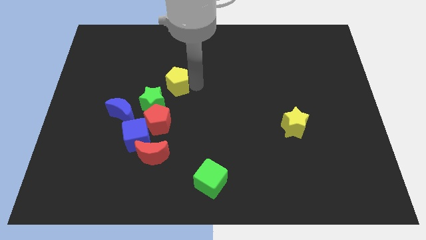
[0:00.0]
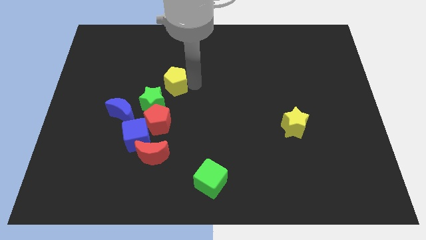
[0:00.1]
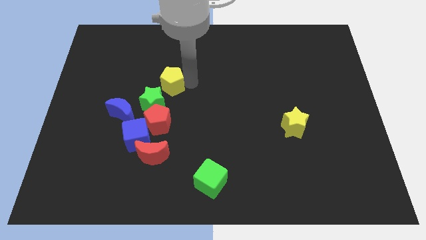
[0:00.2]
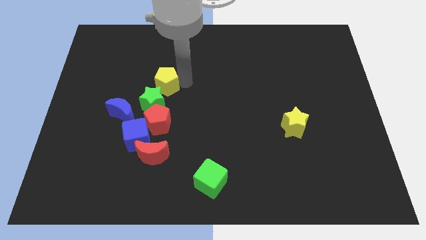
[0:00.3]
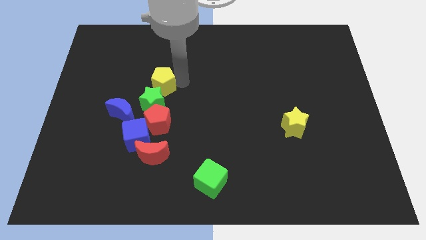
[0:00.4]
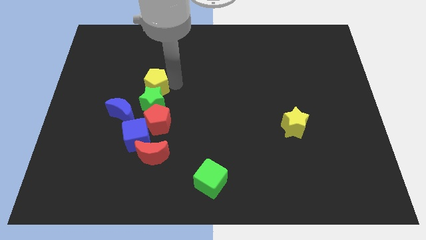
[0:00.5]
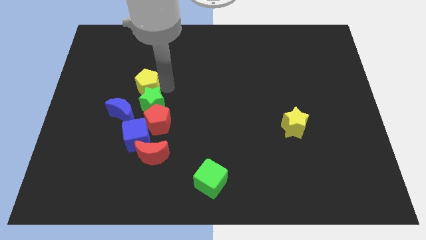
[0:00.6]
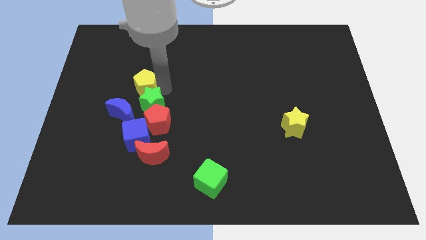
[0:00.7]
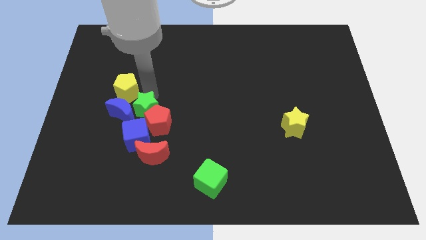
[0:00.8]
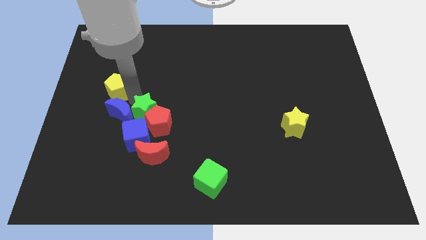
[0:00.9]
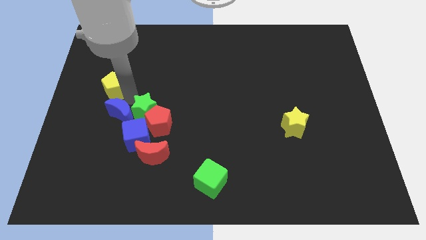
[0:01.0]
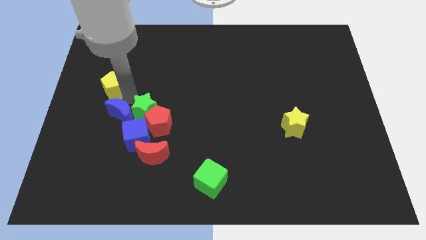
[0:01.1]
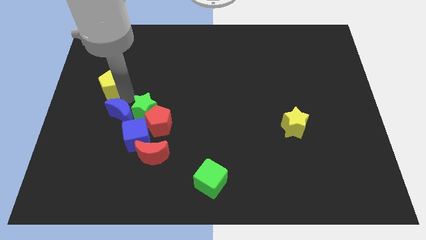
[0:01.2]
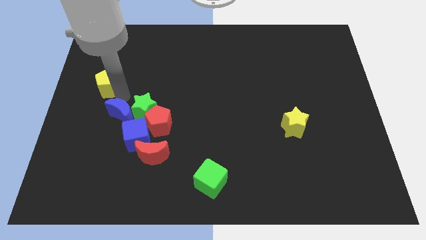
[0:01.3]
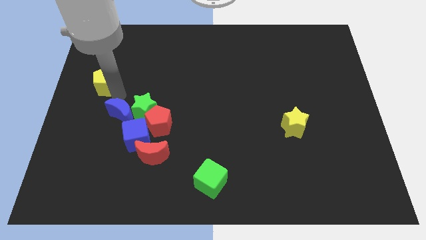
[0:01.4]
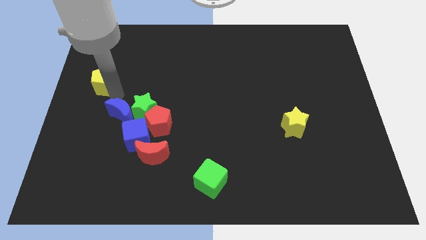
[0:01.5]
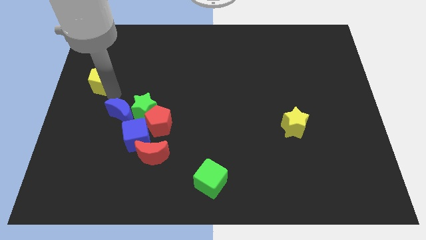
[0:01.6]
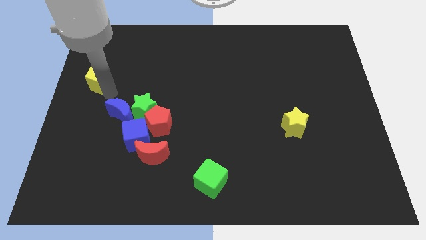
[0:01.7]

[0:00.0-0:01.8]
place the yellow pentagon on center left

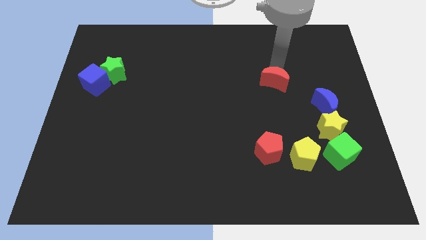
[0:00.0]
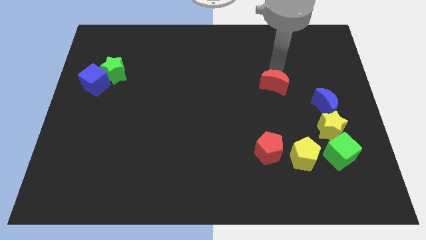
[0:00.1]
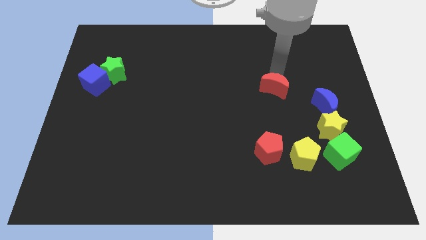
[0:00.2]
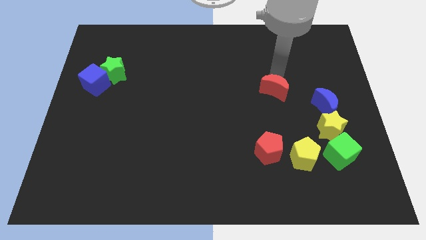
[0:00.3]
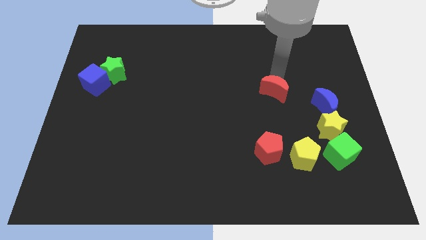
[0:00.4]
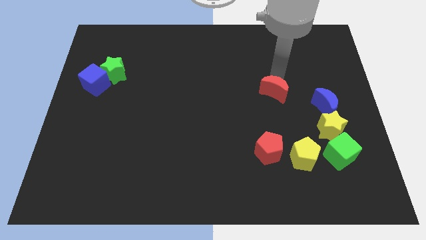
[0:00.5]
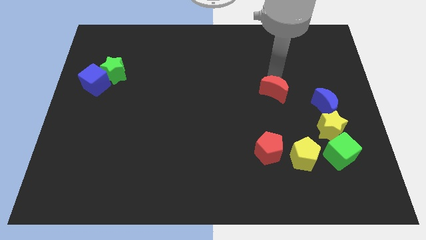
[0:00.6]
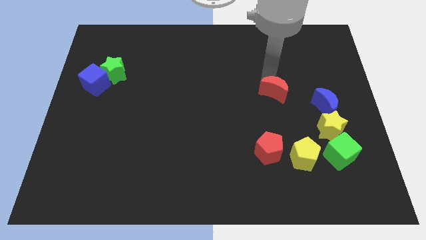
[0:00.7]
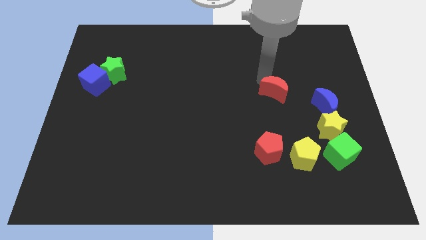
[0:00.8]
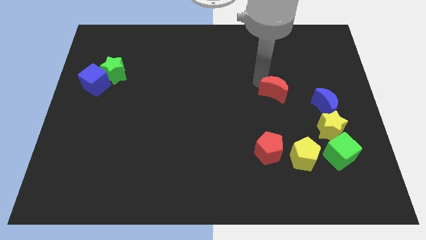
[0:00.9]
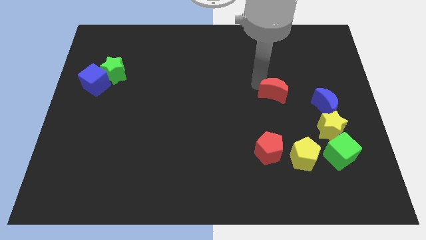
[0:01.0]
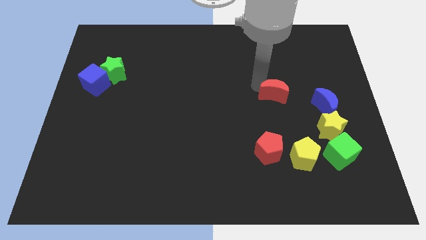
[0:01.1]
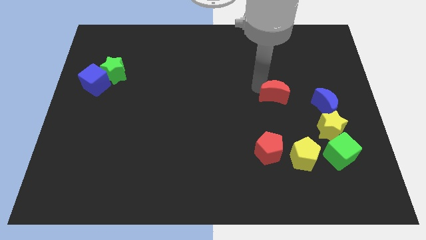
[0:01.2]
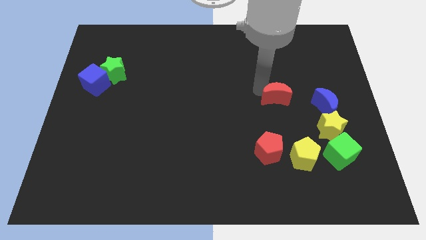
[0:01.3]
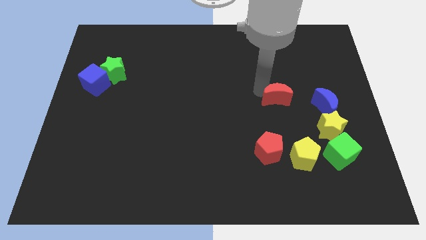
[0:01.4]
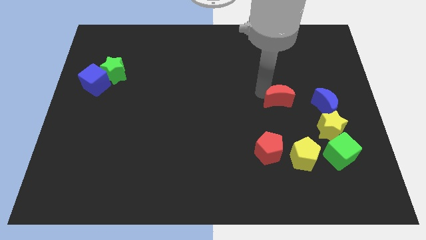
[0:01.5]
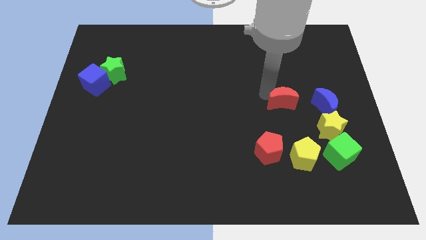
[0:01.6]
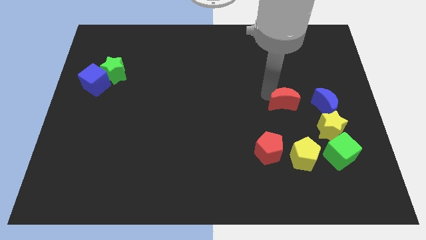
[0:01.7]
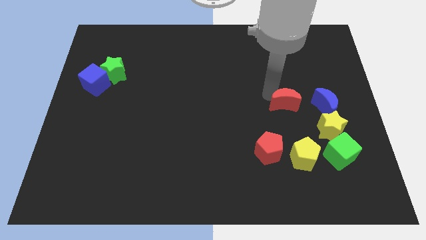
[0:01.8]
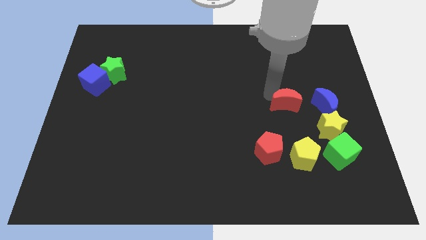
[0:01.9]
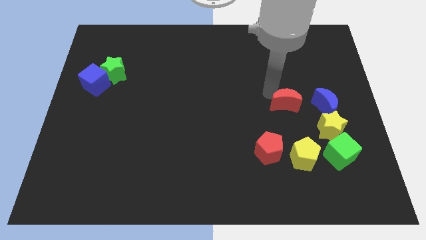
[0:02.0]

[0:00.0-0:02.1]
place red moon to the left of blue moon

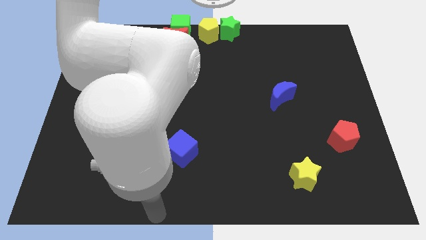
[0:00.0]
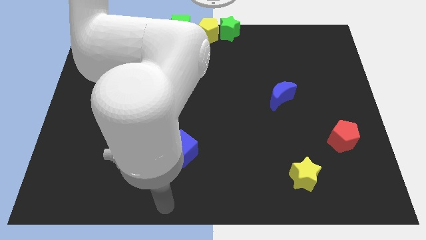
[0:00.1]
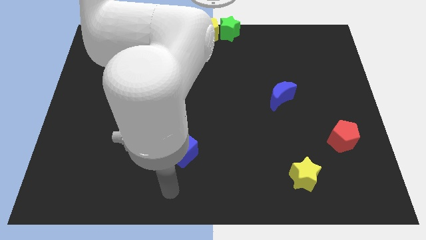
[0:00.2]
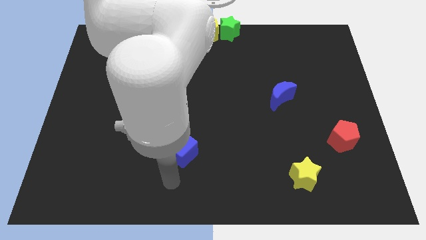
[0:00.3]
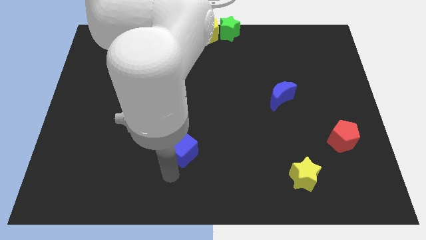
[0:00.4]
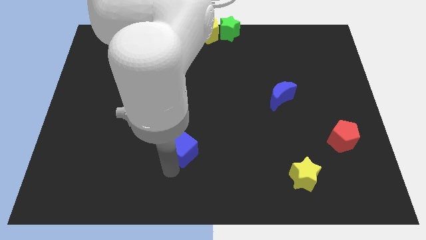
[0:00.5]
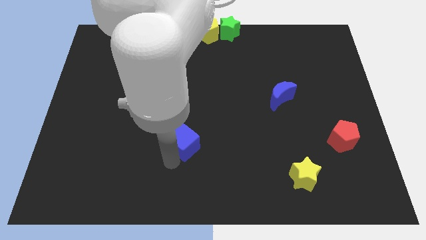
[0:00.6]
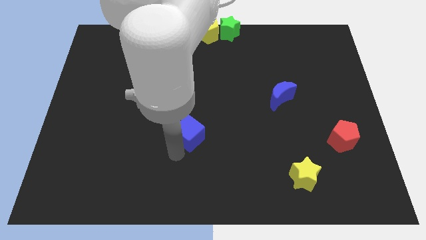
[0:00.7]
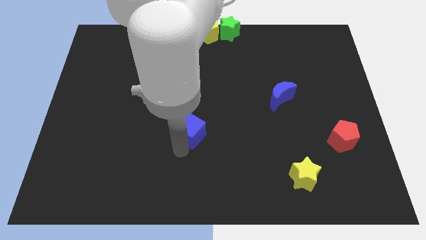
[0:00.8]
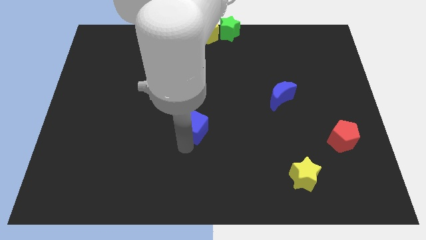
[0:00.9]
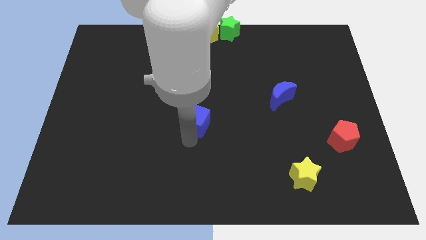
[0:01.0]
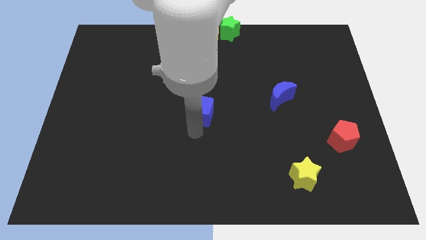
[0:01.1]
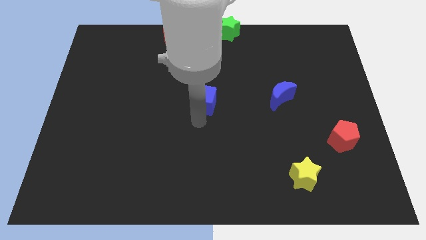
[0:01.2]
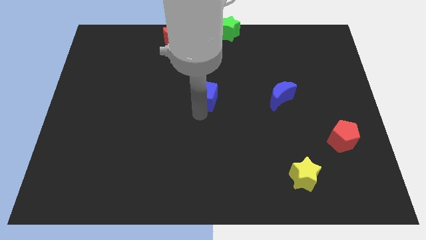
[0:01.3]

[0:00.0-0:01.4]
place the blue cube at center of the board

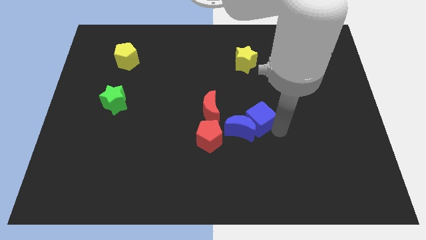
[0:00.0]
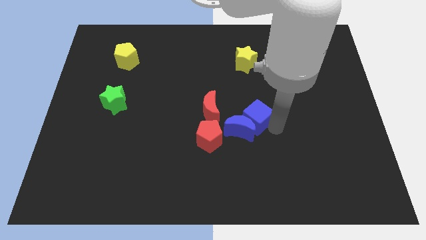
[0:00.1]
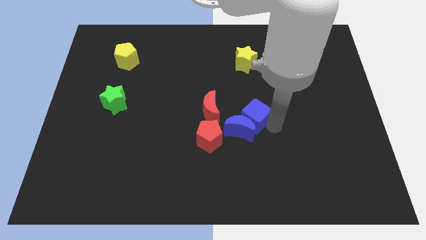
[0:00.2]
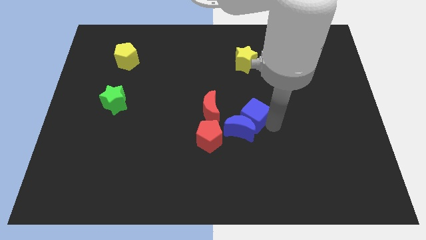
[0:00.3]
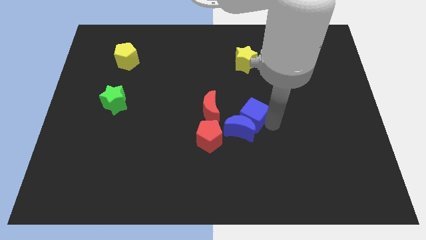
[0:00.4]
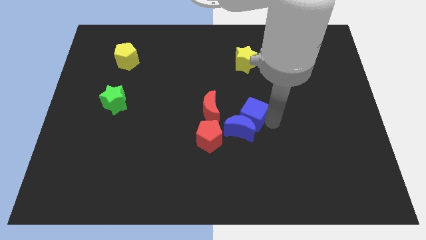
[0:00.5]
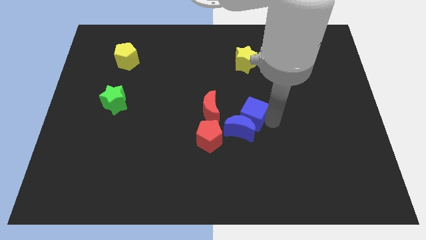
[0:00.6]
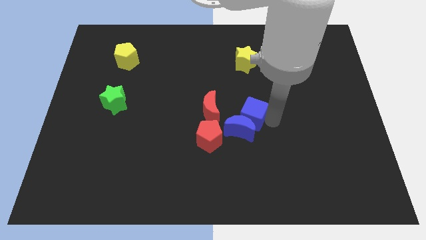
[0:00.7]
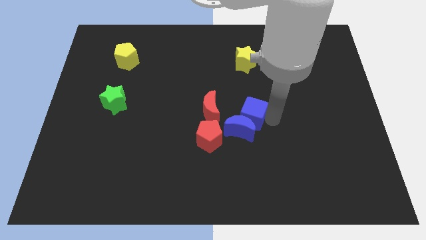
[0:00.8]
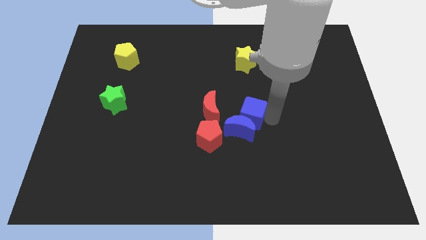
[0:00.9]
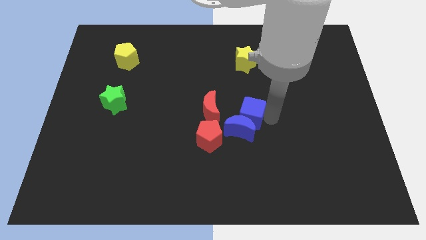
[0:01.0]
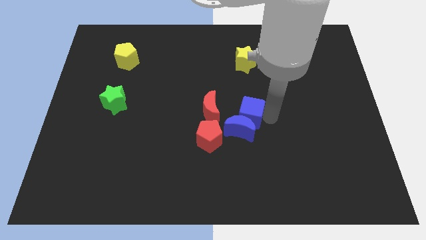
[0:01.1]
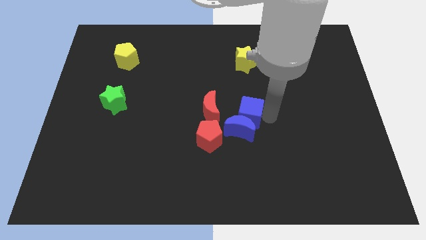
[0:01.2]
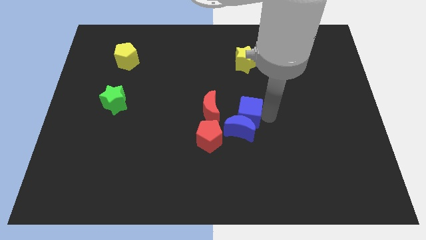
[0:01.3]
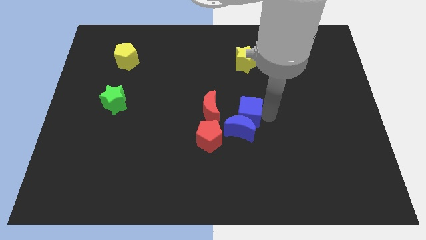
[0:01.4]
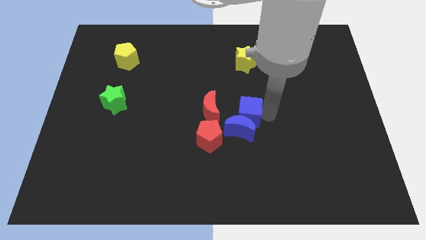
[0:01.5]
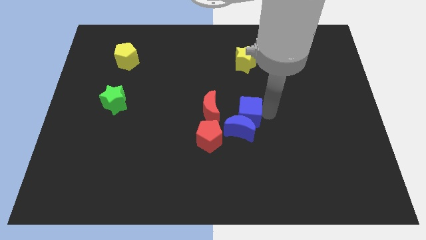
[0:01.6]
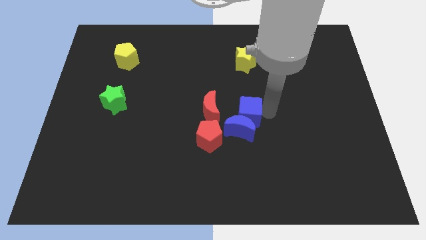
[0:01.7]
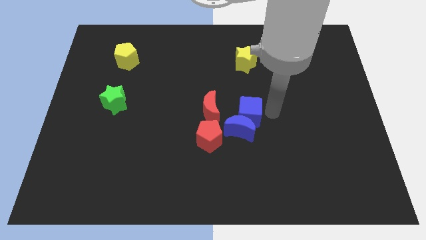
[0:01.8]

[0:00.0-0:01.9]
place the blue cube diagonally right to the top of blue crescent

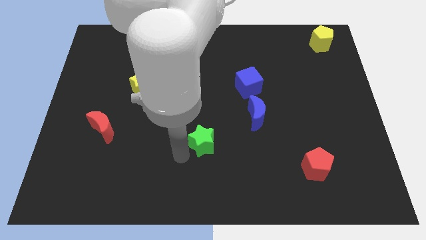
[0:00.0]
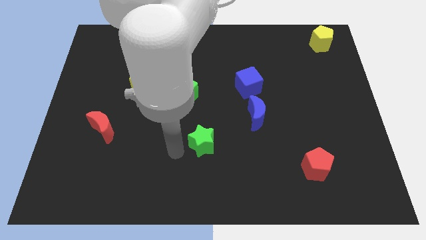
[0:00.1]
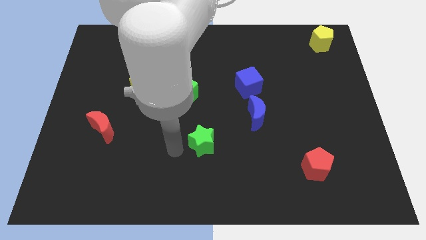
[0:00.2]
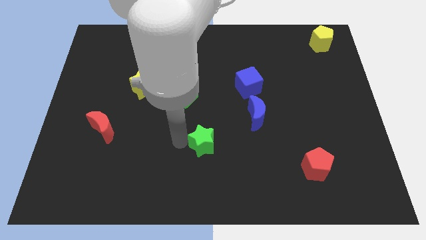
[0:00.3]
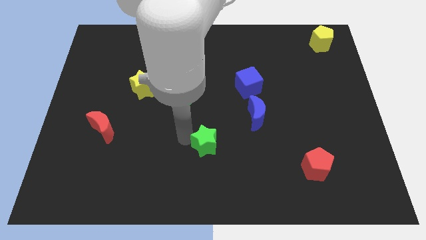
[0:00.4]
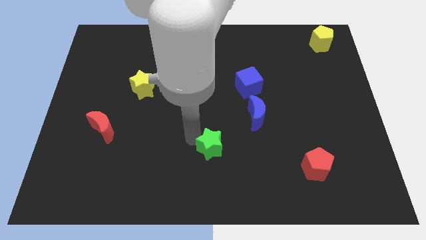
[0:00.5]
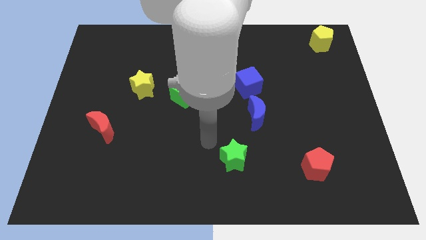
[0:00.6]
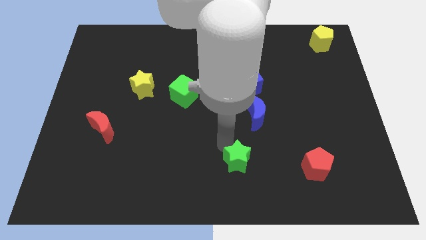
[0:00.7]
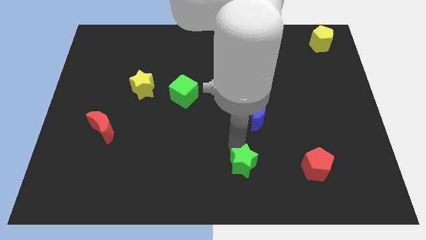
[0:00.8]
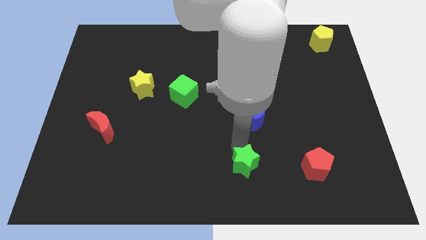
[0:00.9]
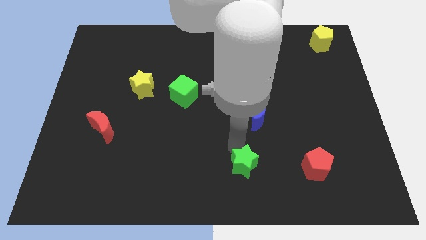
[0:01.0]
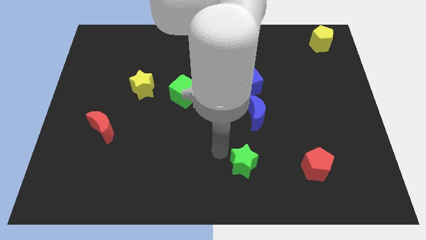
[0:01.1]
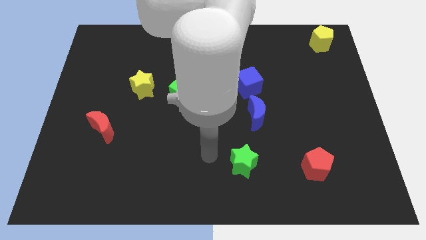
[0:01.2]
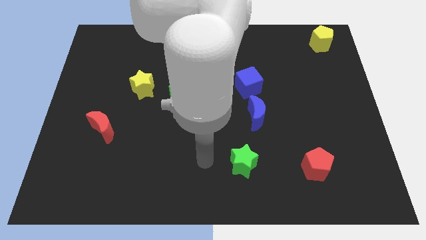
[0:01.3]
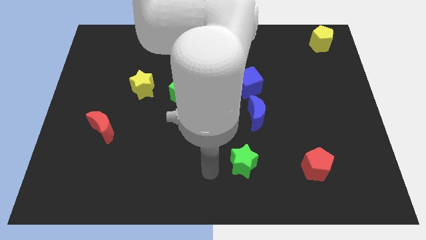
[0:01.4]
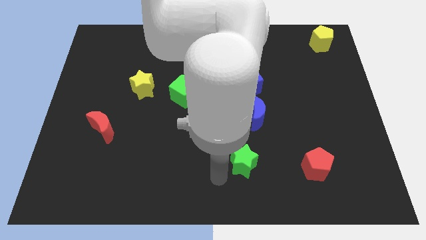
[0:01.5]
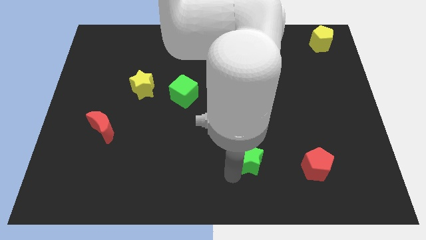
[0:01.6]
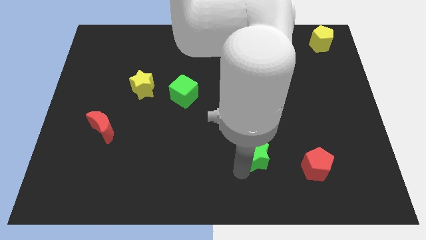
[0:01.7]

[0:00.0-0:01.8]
push the green star below the blue moon
